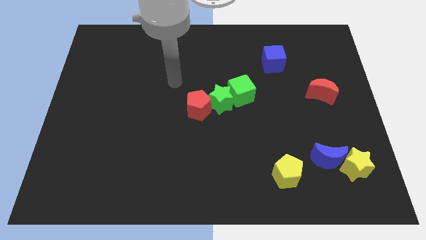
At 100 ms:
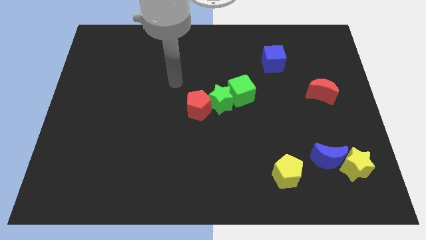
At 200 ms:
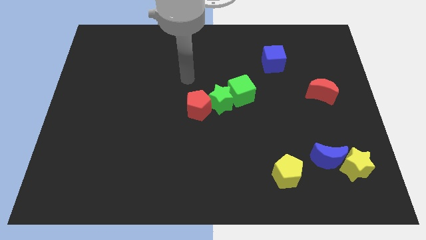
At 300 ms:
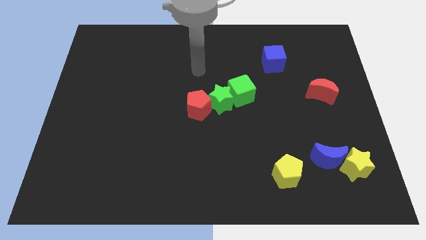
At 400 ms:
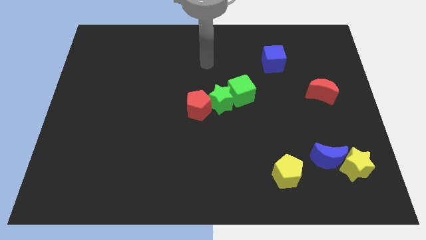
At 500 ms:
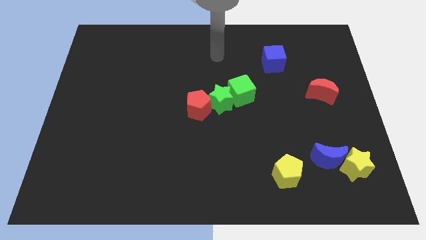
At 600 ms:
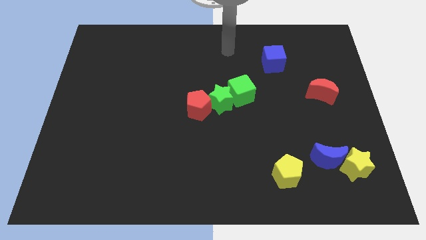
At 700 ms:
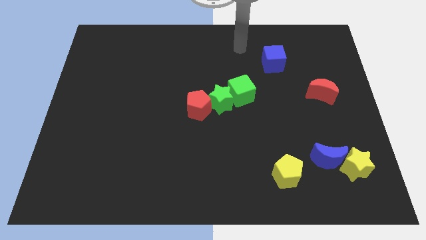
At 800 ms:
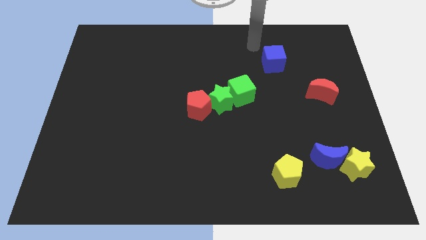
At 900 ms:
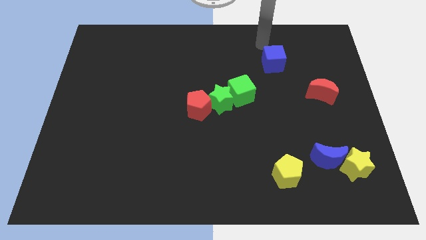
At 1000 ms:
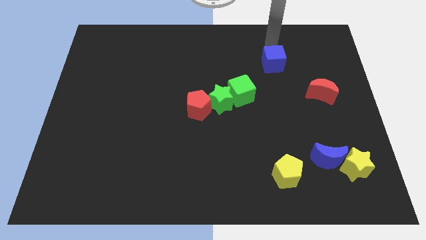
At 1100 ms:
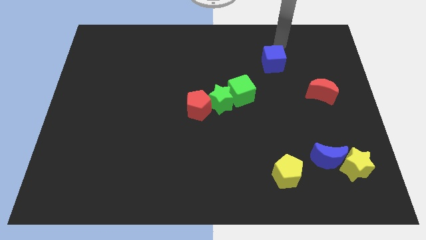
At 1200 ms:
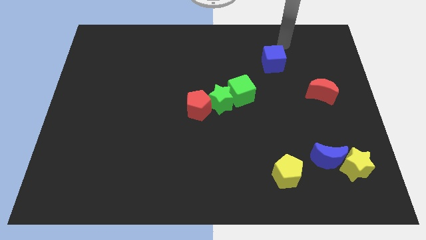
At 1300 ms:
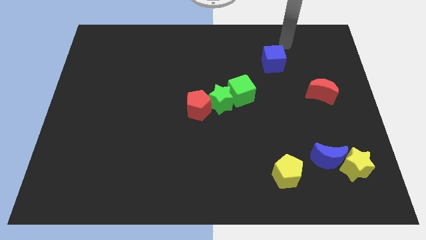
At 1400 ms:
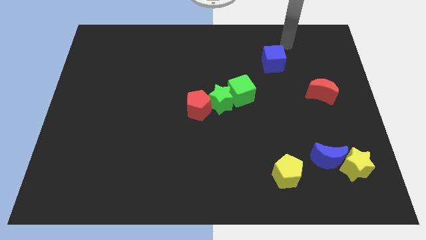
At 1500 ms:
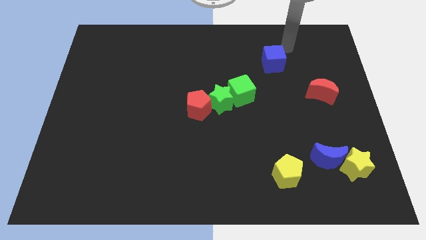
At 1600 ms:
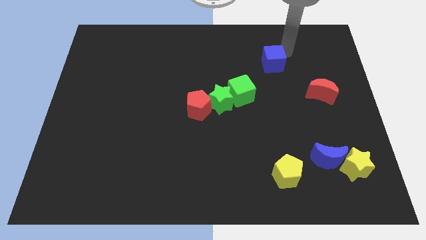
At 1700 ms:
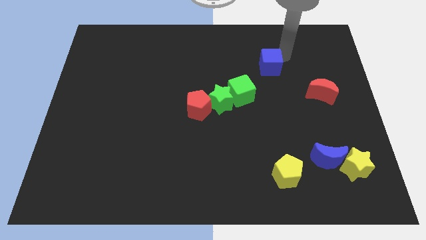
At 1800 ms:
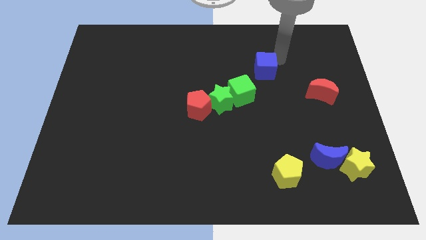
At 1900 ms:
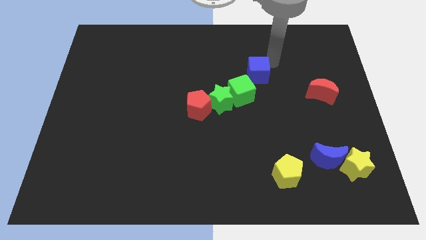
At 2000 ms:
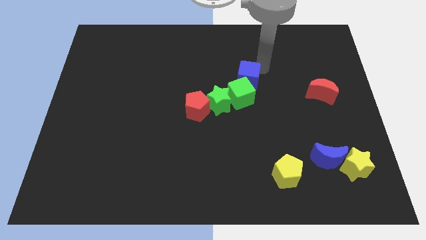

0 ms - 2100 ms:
push the blue cube towards the green cube

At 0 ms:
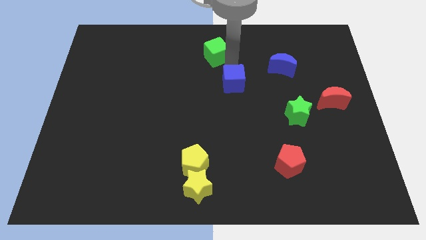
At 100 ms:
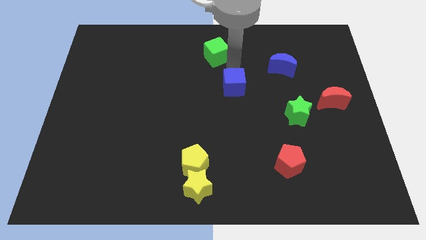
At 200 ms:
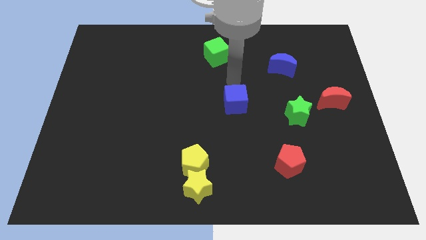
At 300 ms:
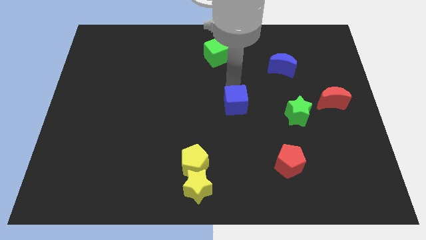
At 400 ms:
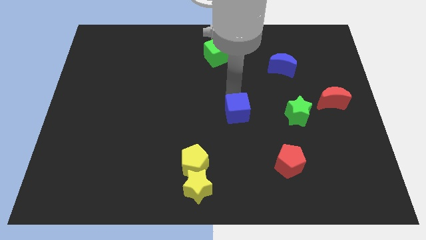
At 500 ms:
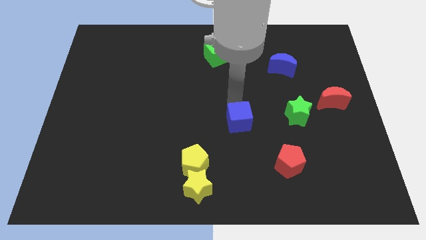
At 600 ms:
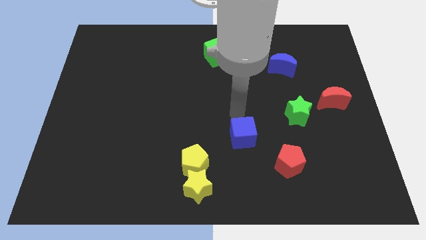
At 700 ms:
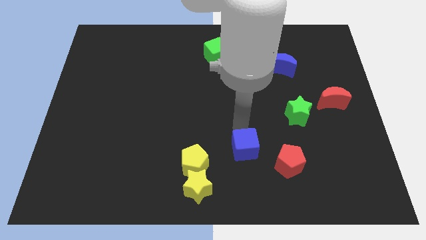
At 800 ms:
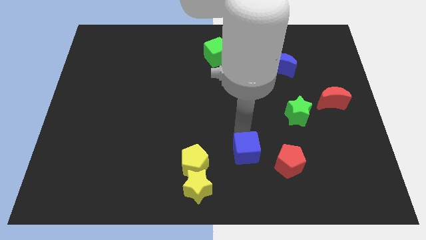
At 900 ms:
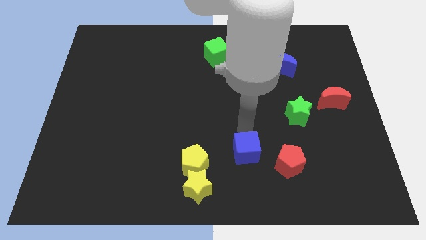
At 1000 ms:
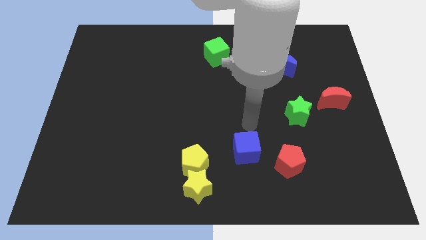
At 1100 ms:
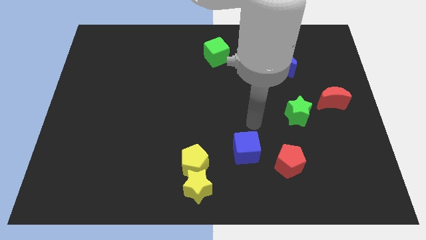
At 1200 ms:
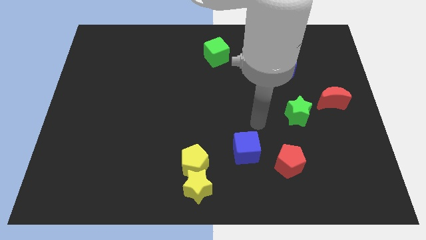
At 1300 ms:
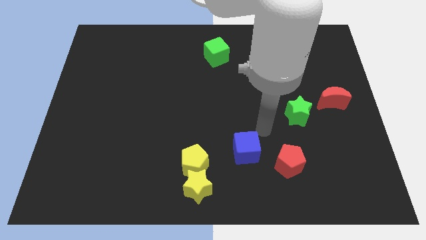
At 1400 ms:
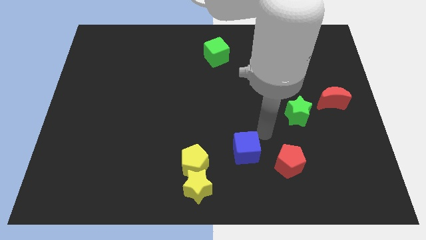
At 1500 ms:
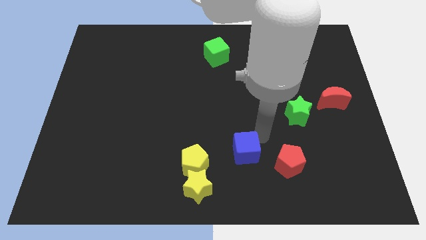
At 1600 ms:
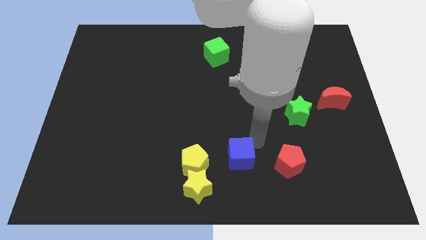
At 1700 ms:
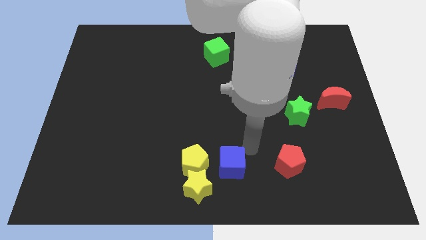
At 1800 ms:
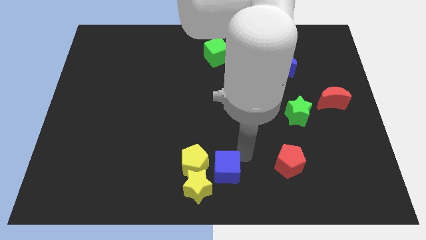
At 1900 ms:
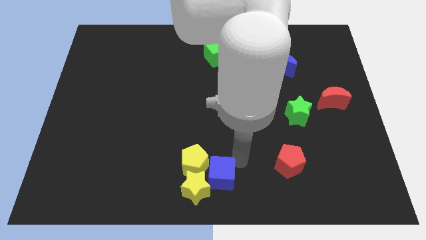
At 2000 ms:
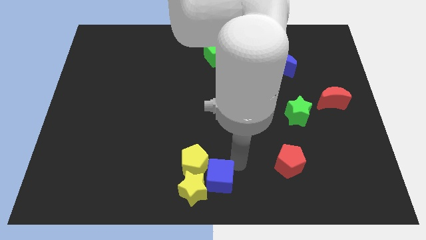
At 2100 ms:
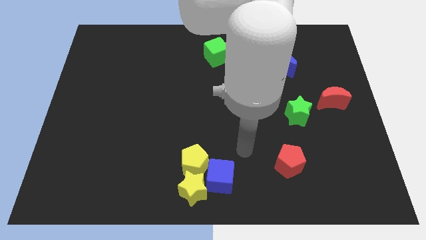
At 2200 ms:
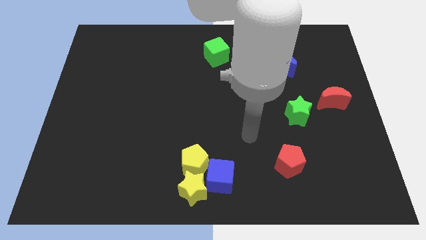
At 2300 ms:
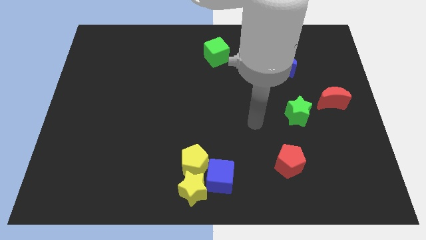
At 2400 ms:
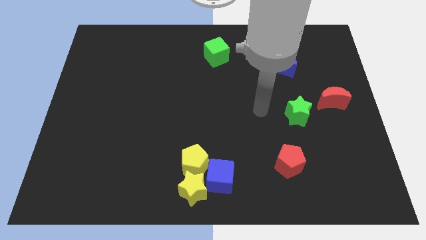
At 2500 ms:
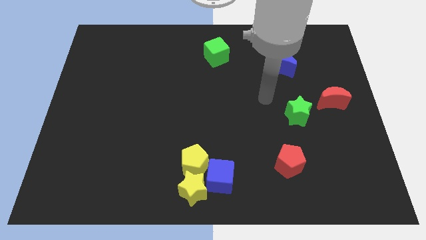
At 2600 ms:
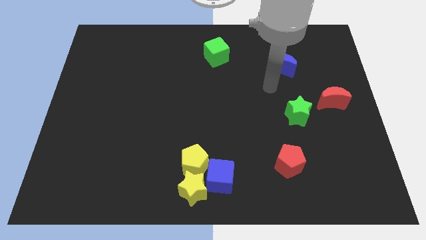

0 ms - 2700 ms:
push the blue cube towards the yellow blocks

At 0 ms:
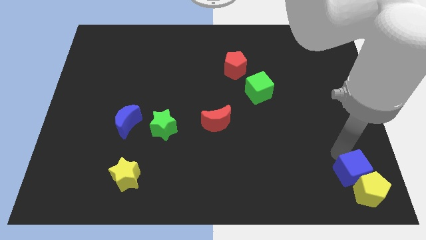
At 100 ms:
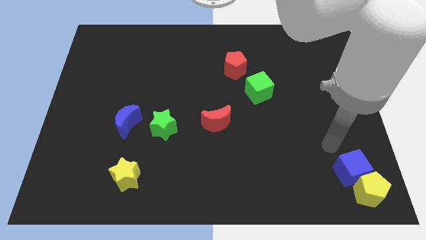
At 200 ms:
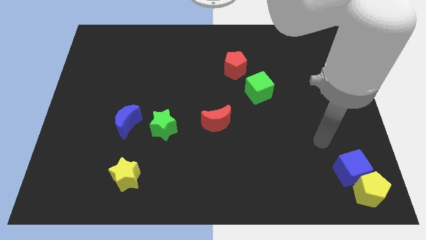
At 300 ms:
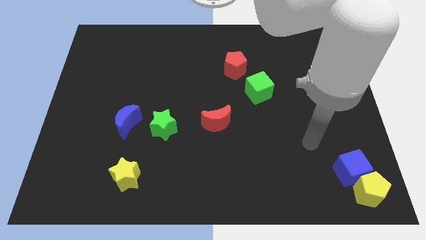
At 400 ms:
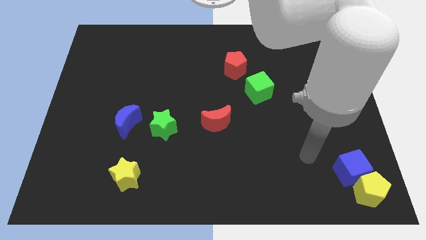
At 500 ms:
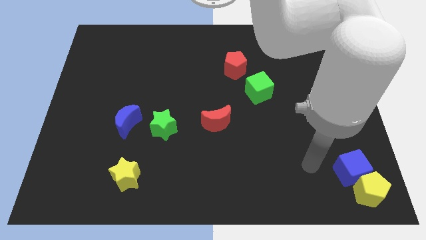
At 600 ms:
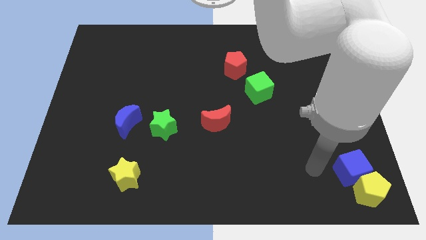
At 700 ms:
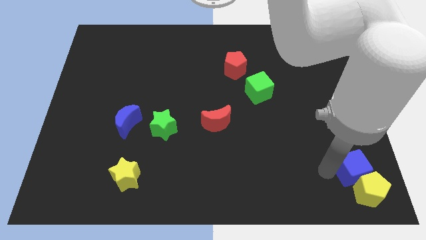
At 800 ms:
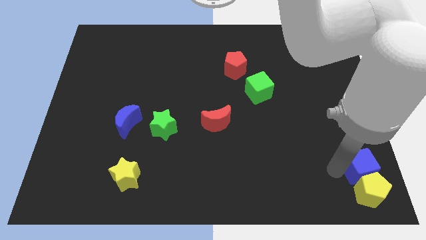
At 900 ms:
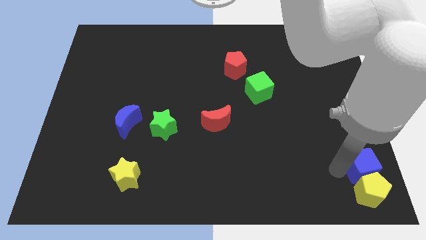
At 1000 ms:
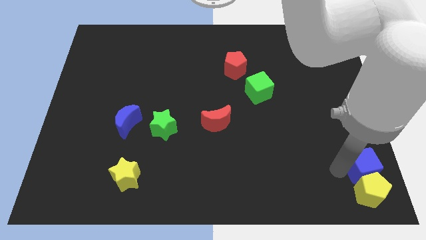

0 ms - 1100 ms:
move the blue cube slightly to the left

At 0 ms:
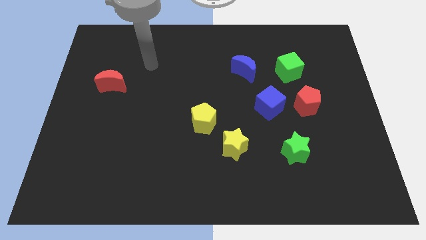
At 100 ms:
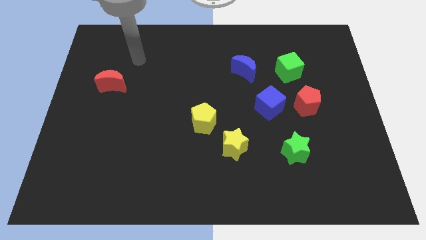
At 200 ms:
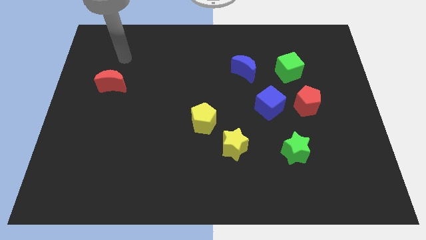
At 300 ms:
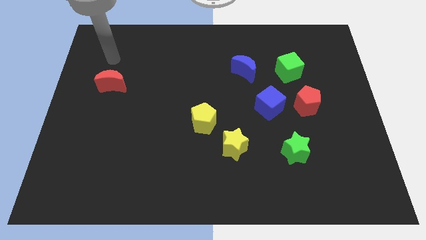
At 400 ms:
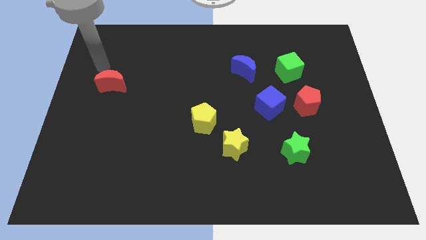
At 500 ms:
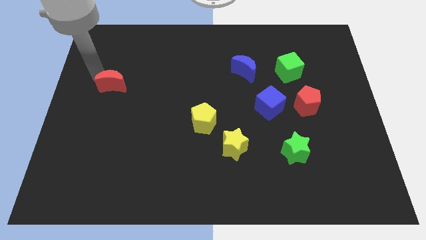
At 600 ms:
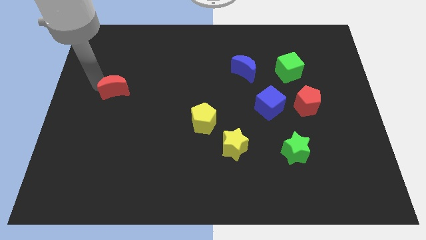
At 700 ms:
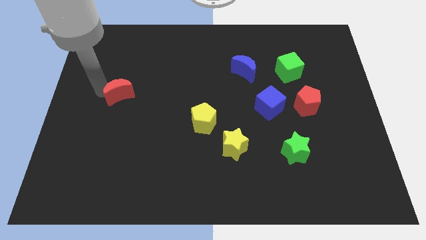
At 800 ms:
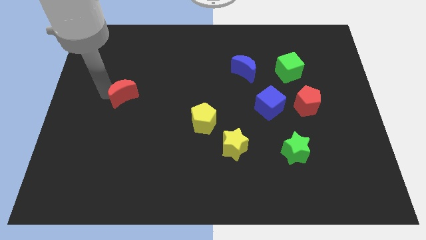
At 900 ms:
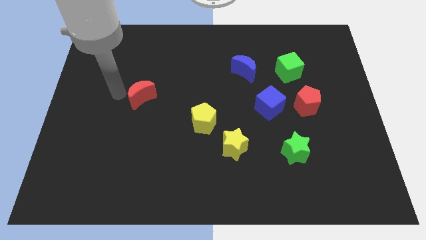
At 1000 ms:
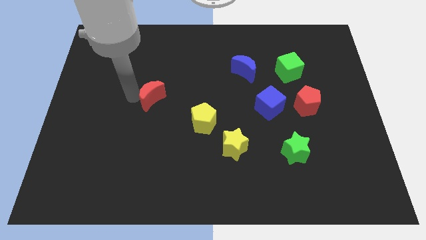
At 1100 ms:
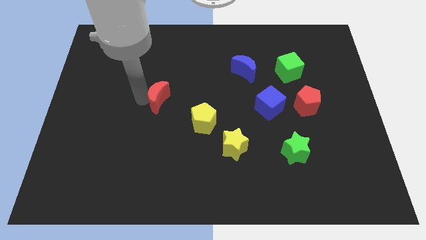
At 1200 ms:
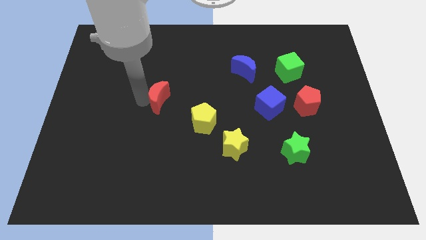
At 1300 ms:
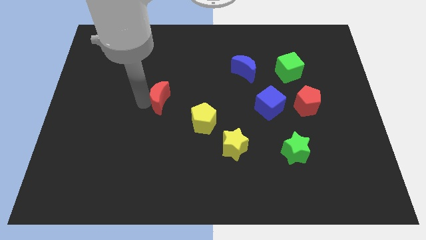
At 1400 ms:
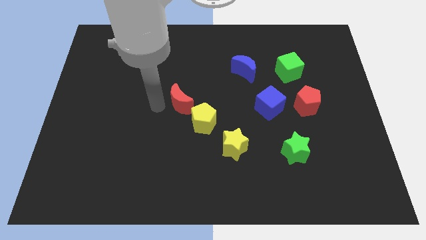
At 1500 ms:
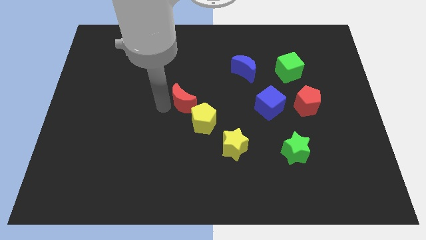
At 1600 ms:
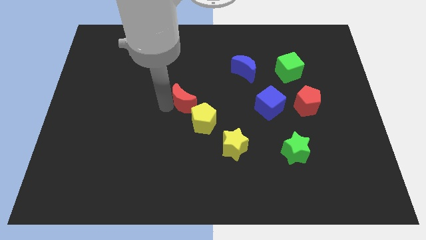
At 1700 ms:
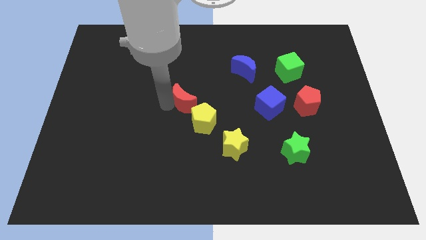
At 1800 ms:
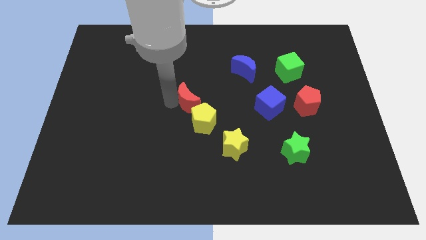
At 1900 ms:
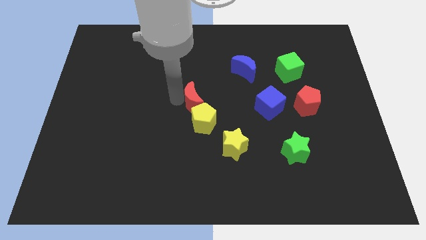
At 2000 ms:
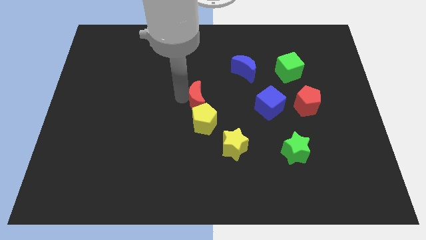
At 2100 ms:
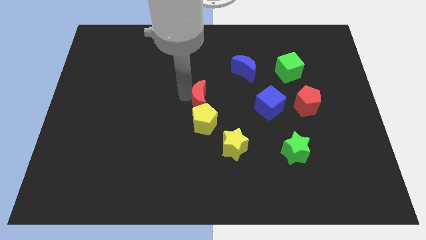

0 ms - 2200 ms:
move red moon close to the yellow pentagon

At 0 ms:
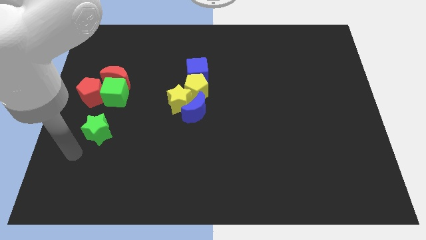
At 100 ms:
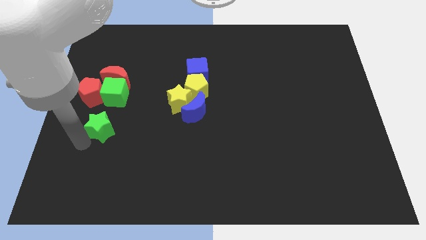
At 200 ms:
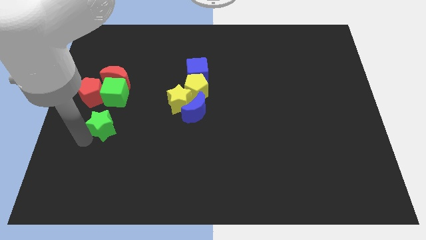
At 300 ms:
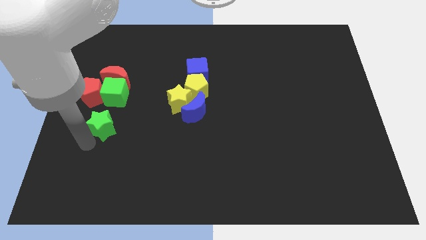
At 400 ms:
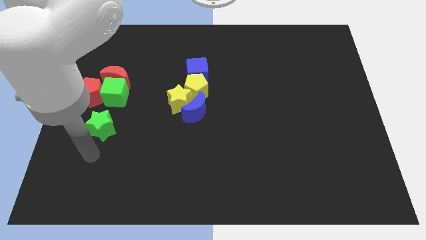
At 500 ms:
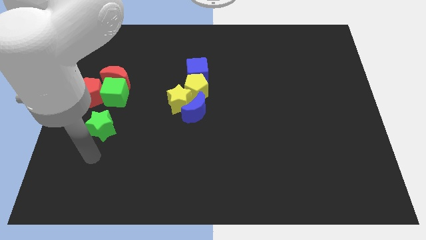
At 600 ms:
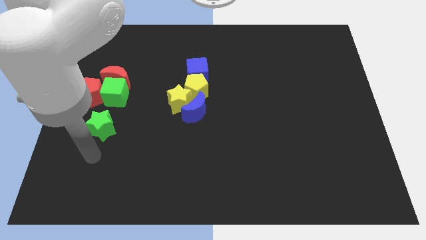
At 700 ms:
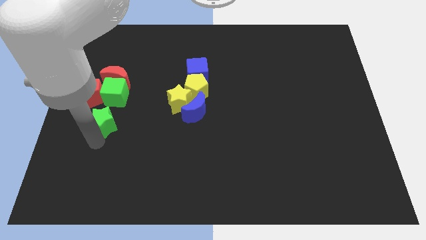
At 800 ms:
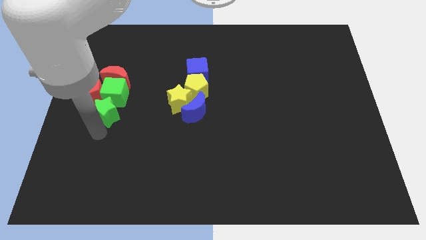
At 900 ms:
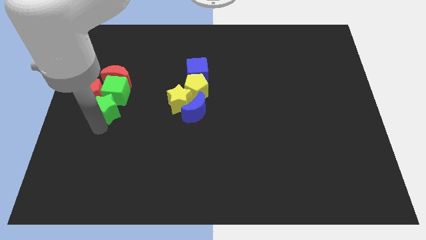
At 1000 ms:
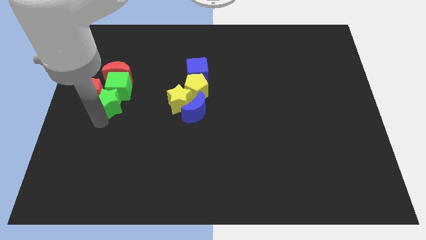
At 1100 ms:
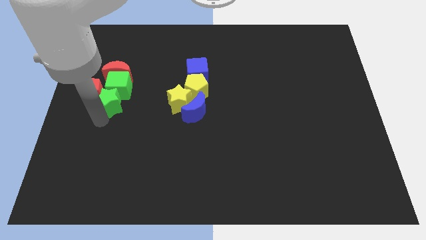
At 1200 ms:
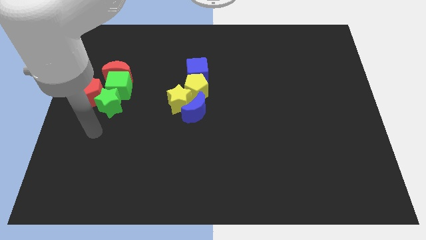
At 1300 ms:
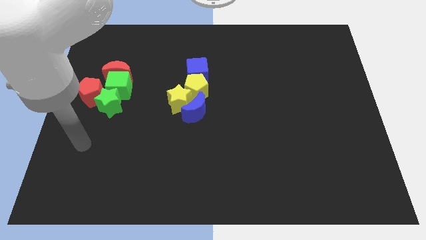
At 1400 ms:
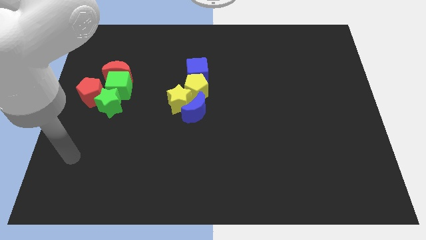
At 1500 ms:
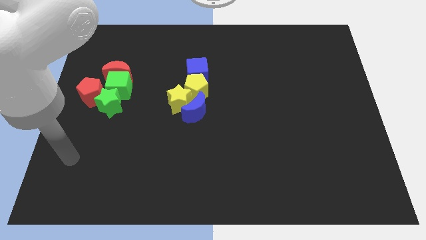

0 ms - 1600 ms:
slide the green star into the green cube
